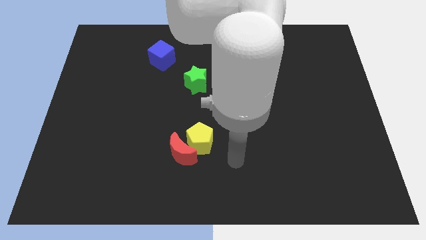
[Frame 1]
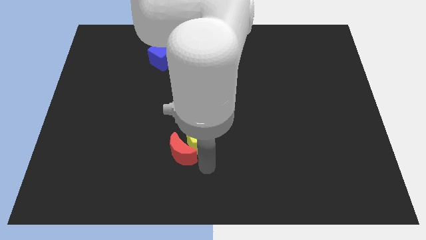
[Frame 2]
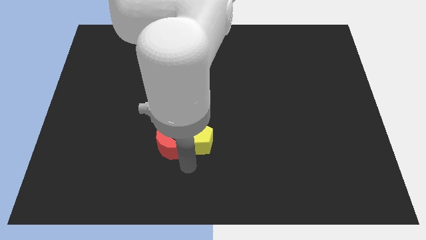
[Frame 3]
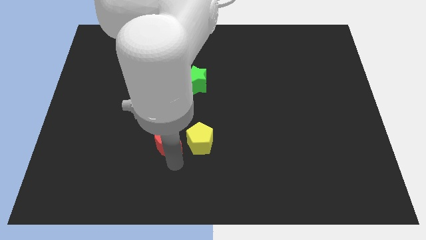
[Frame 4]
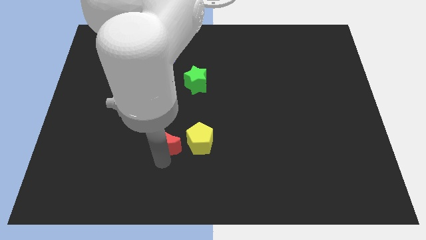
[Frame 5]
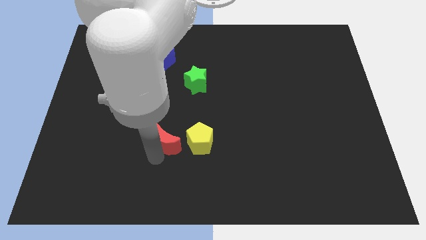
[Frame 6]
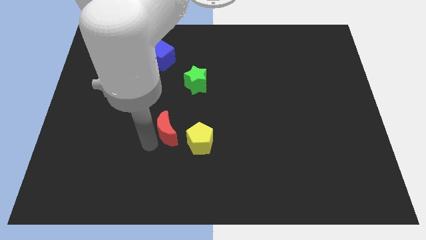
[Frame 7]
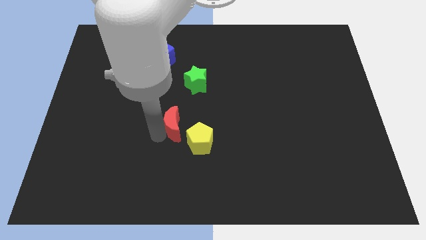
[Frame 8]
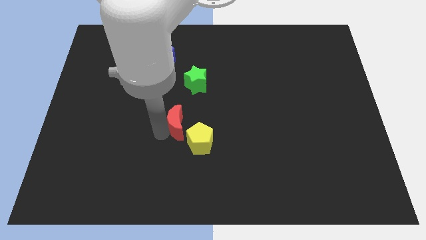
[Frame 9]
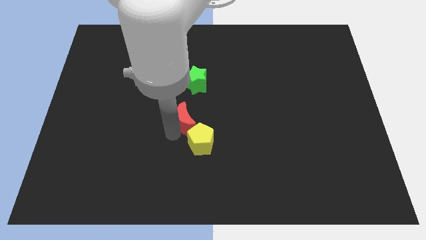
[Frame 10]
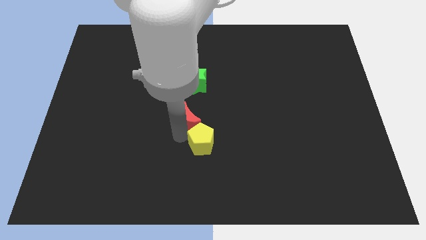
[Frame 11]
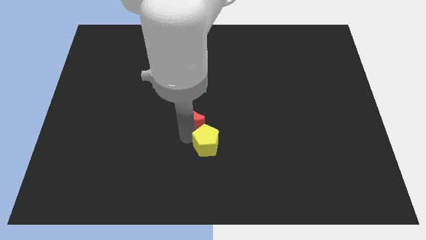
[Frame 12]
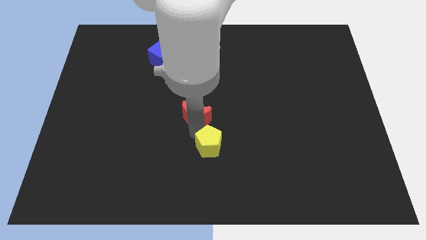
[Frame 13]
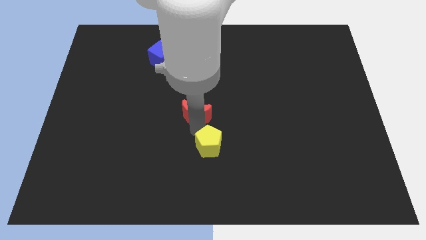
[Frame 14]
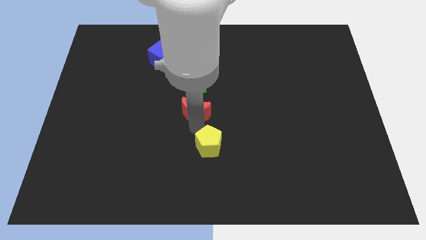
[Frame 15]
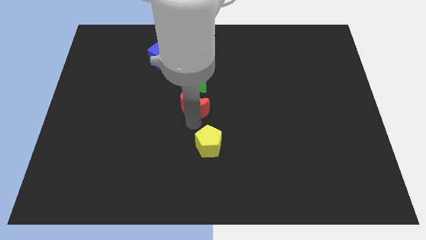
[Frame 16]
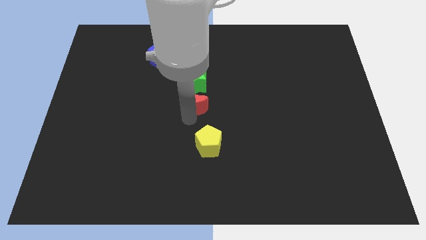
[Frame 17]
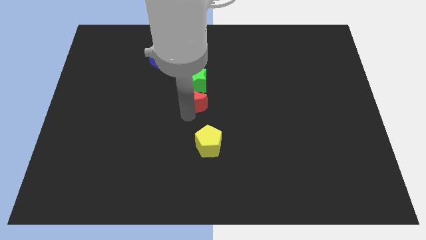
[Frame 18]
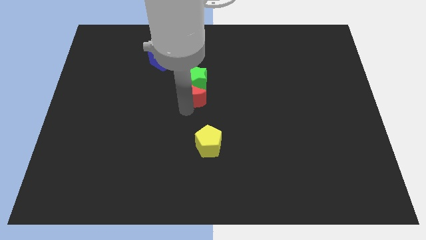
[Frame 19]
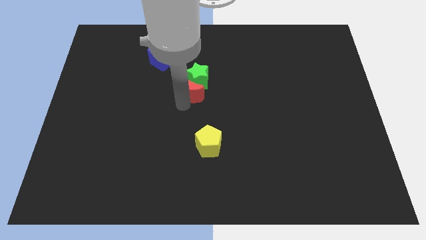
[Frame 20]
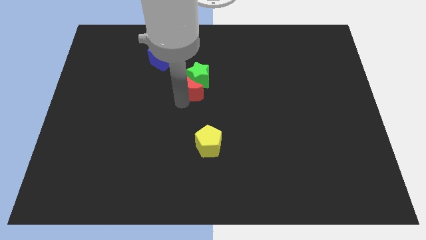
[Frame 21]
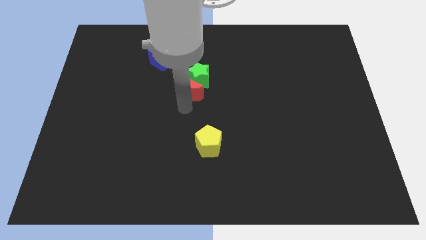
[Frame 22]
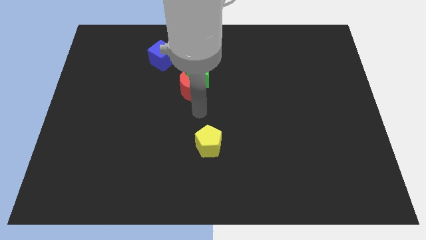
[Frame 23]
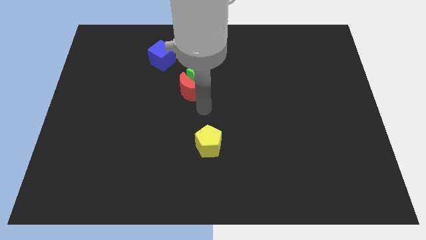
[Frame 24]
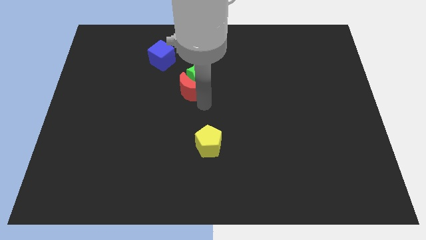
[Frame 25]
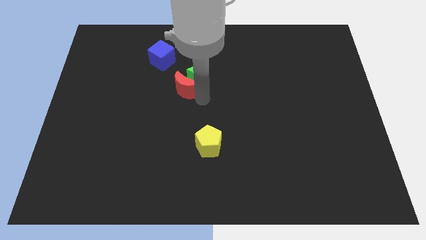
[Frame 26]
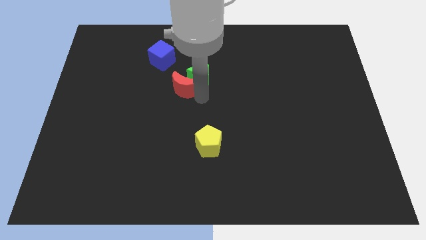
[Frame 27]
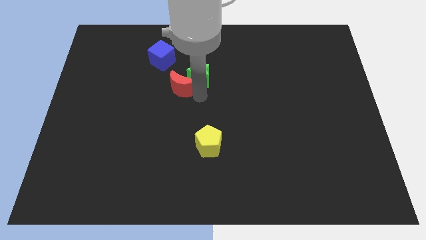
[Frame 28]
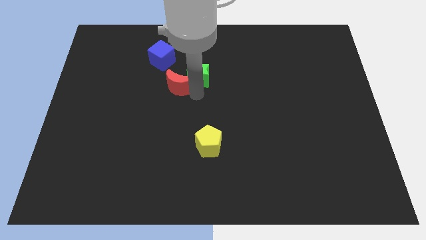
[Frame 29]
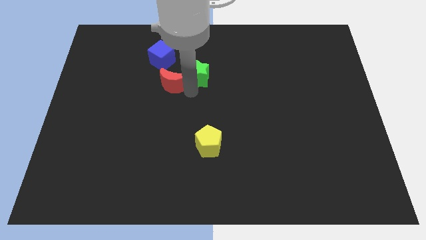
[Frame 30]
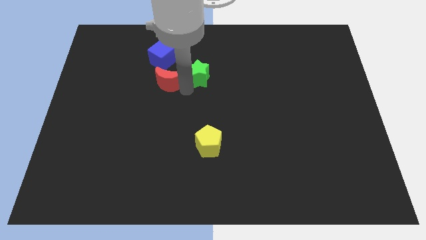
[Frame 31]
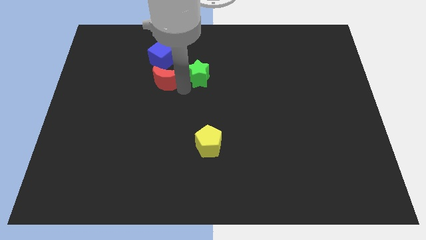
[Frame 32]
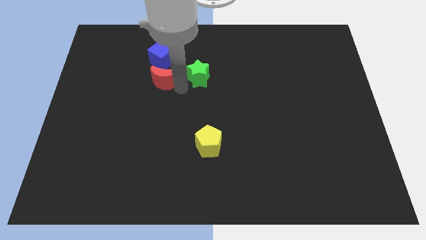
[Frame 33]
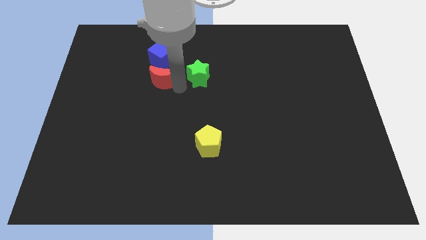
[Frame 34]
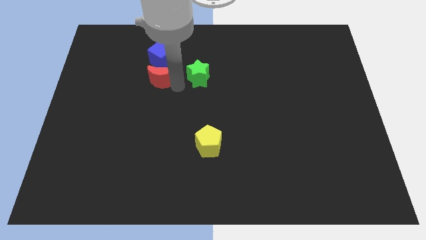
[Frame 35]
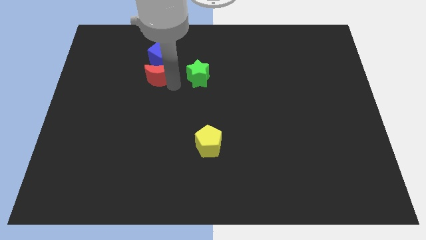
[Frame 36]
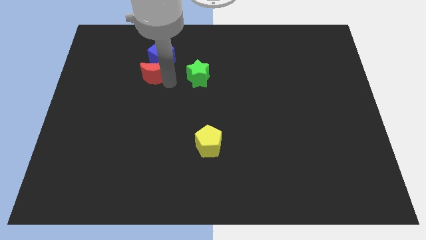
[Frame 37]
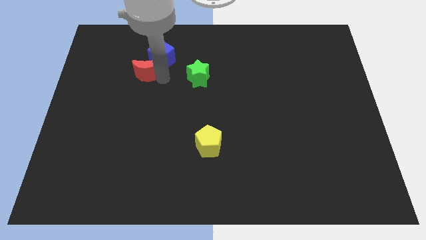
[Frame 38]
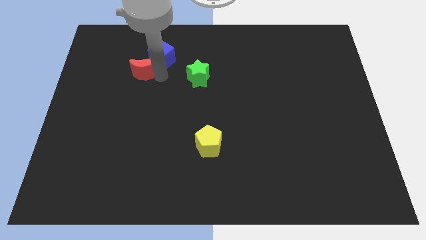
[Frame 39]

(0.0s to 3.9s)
move the moon next to the blue cube

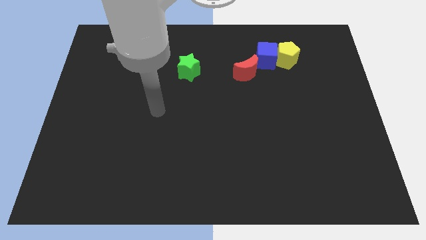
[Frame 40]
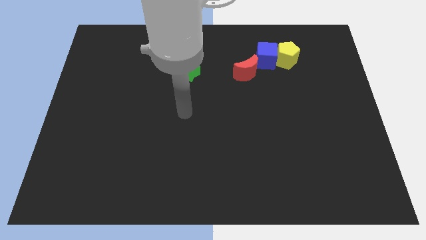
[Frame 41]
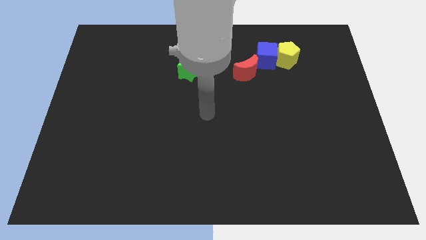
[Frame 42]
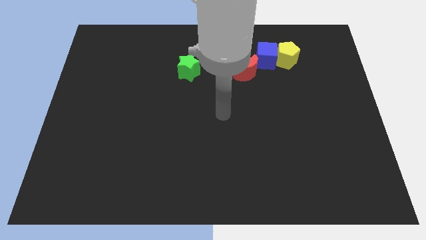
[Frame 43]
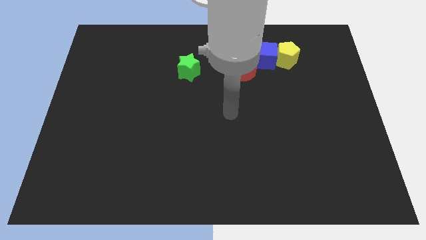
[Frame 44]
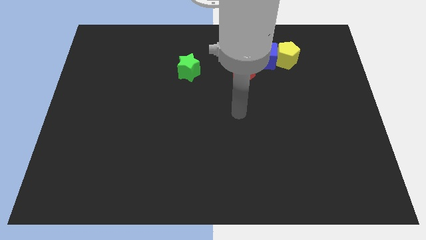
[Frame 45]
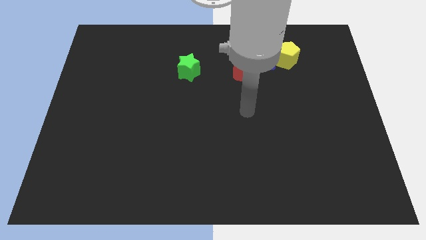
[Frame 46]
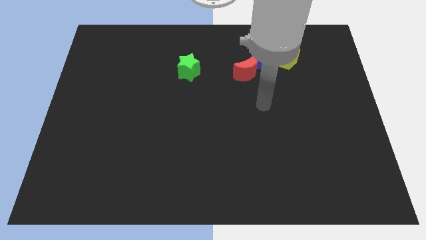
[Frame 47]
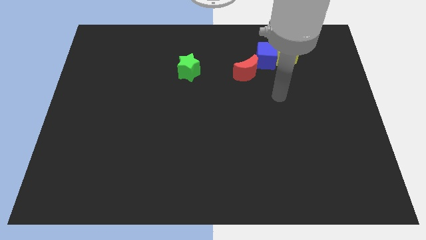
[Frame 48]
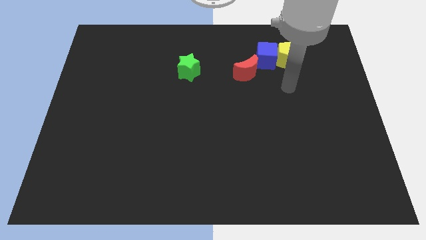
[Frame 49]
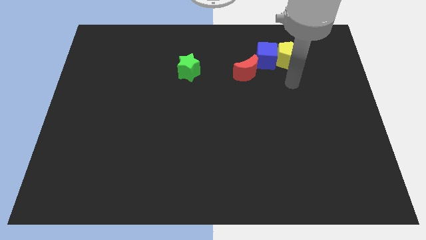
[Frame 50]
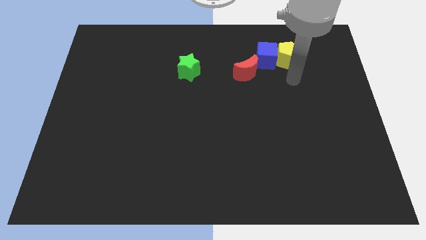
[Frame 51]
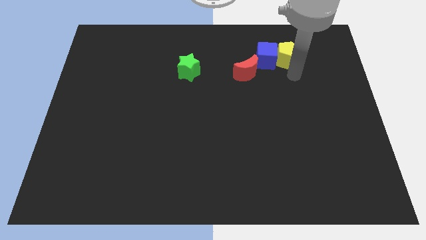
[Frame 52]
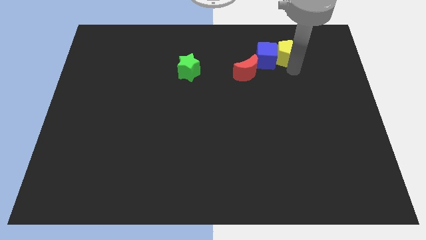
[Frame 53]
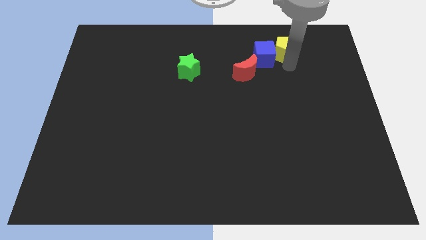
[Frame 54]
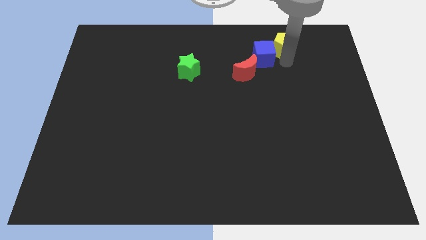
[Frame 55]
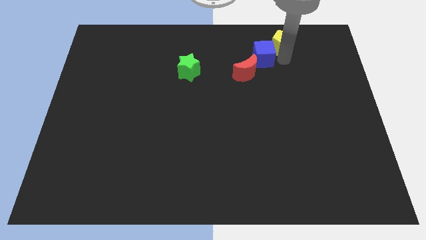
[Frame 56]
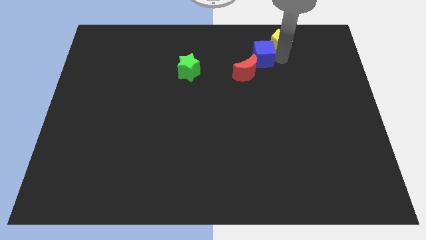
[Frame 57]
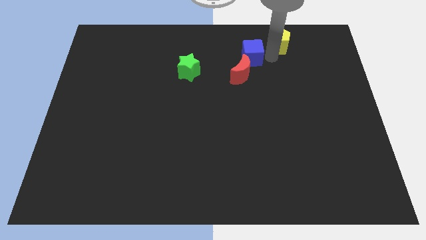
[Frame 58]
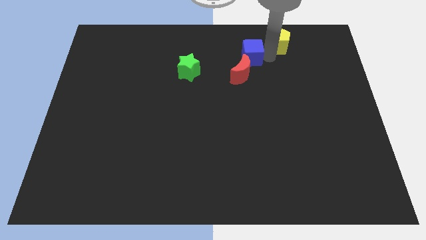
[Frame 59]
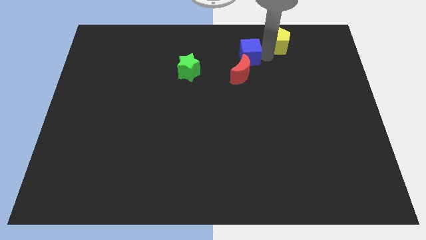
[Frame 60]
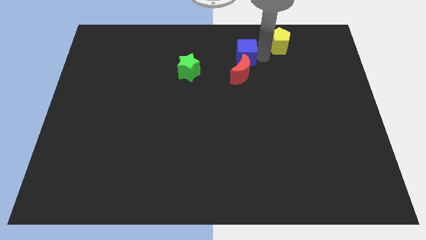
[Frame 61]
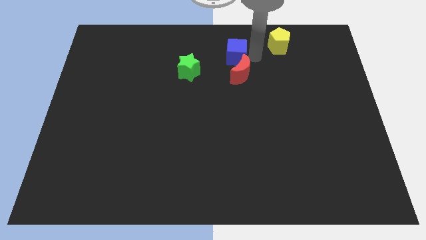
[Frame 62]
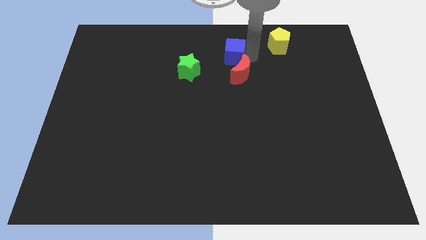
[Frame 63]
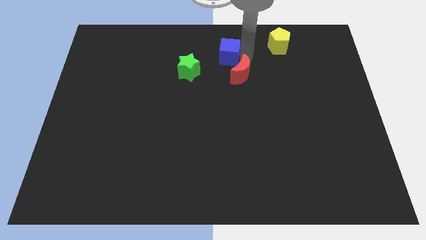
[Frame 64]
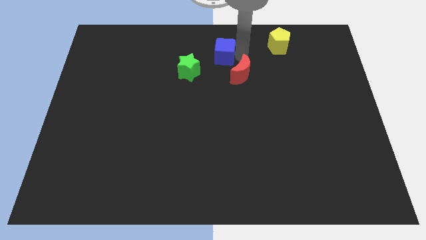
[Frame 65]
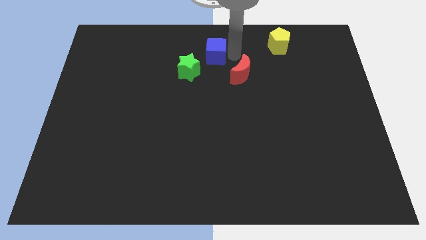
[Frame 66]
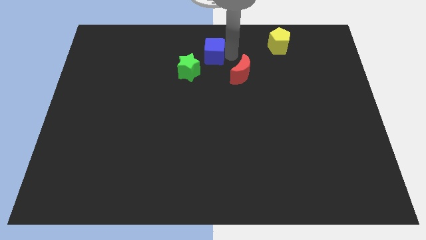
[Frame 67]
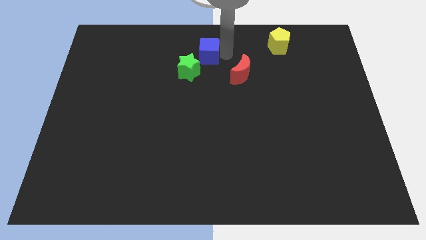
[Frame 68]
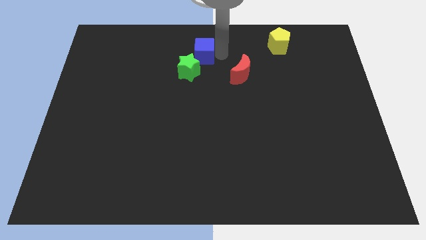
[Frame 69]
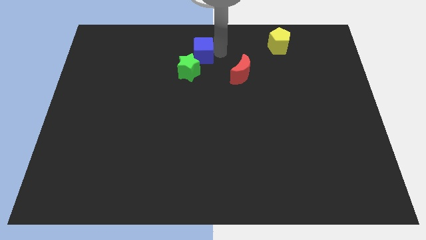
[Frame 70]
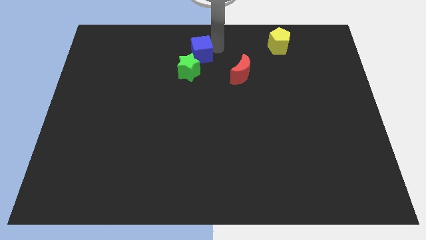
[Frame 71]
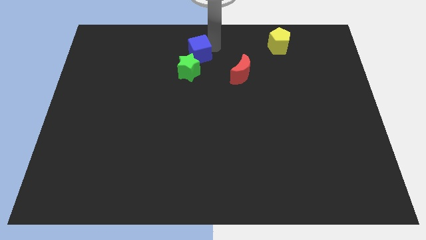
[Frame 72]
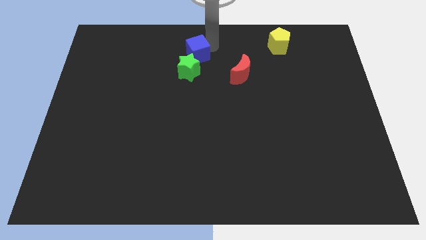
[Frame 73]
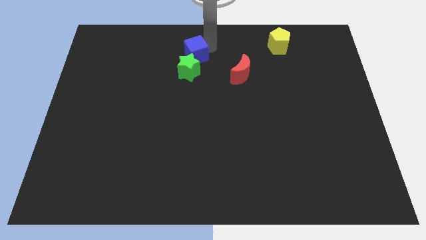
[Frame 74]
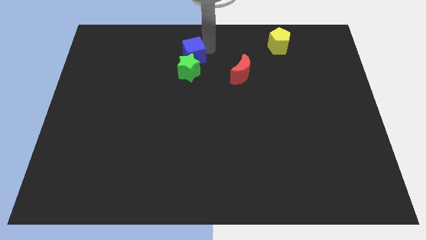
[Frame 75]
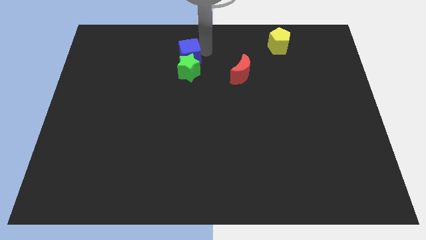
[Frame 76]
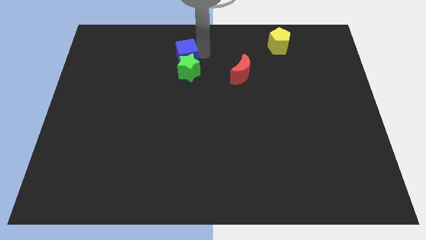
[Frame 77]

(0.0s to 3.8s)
push the cube towards the green block
